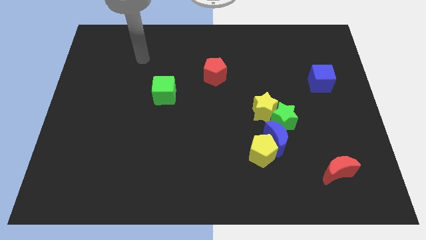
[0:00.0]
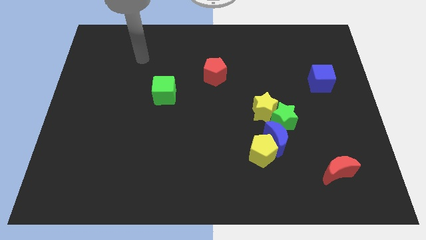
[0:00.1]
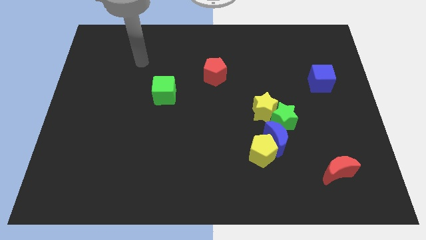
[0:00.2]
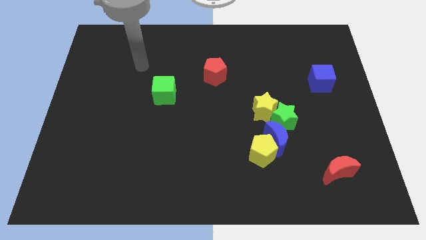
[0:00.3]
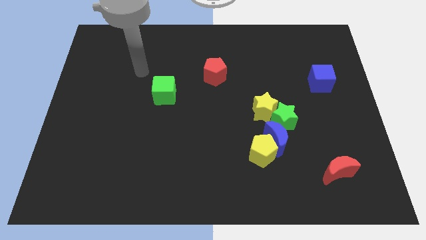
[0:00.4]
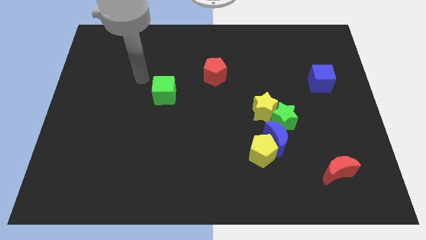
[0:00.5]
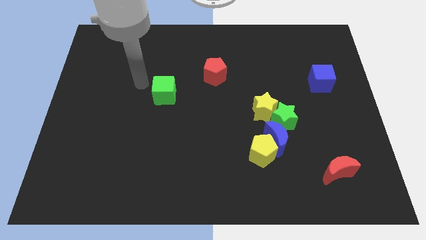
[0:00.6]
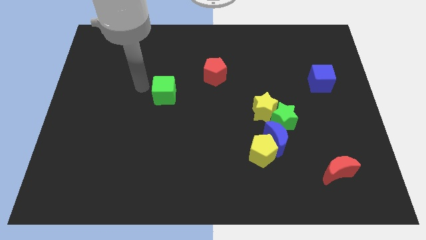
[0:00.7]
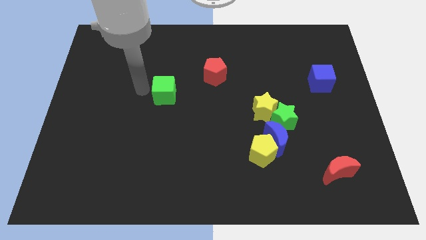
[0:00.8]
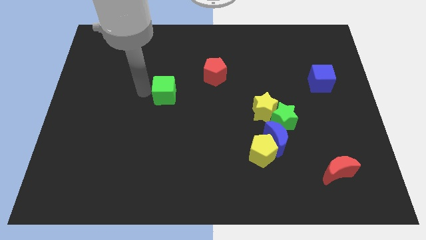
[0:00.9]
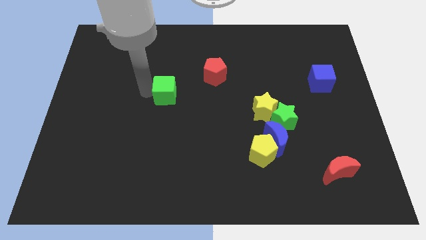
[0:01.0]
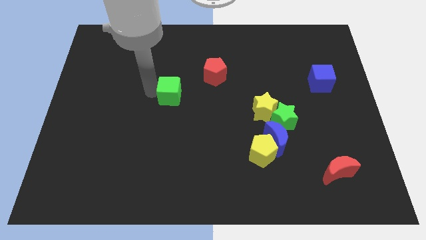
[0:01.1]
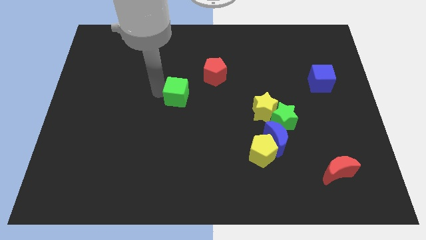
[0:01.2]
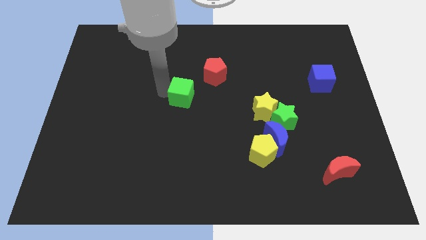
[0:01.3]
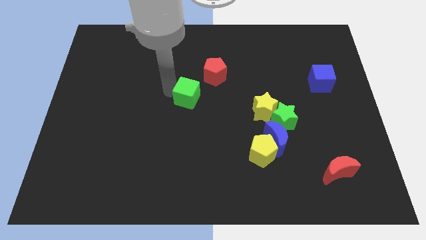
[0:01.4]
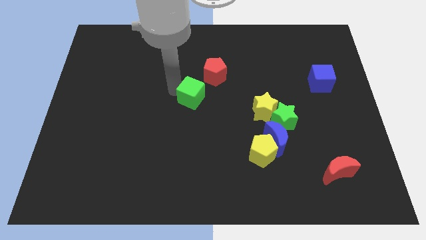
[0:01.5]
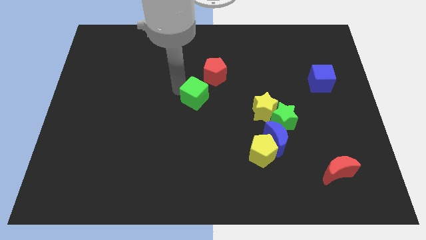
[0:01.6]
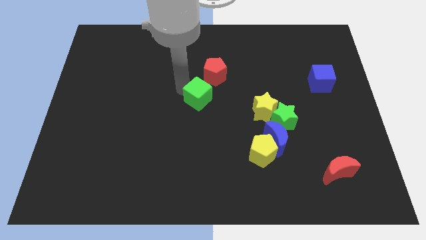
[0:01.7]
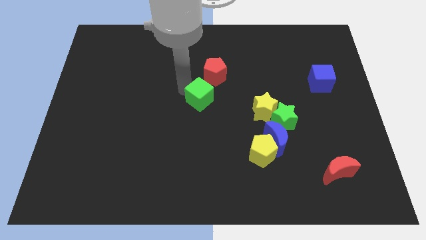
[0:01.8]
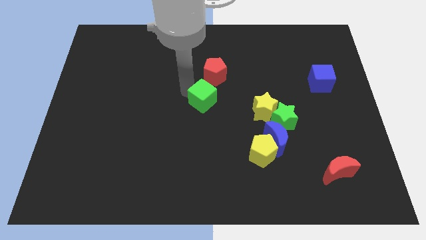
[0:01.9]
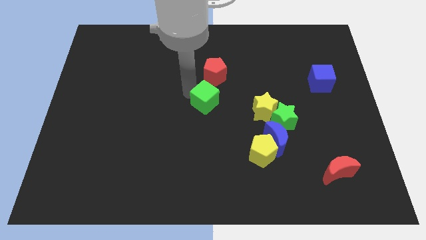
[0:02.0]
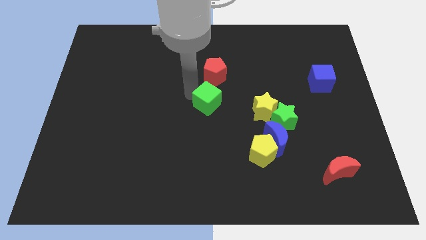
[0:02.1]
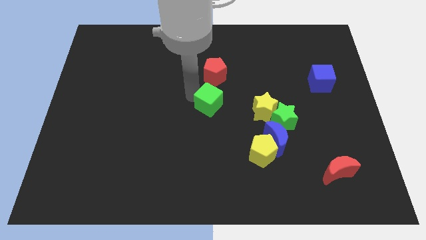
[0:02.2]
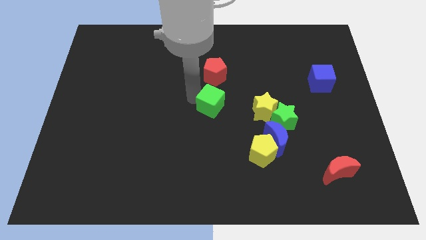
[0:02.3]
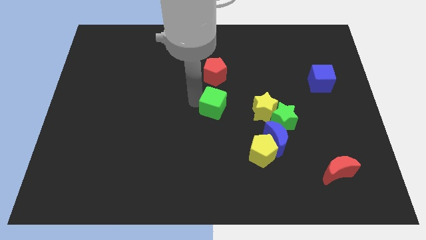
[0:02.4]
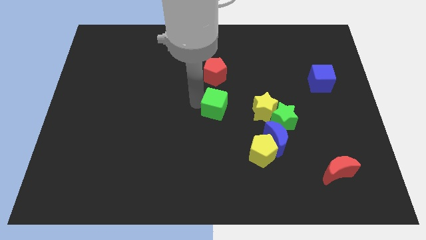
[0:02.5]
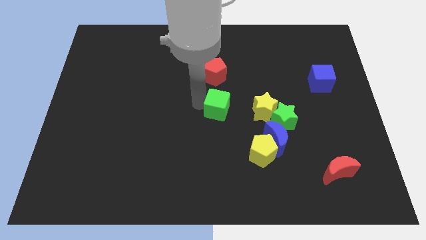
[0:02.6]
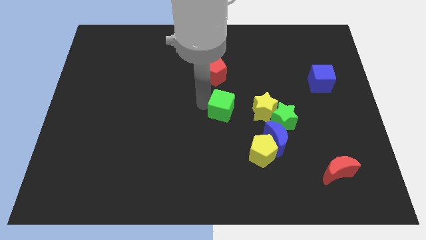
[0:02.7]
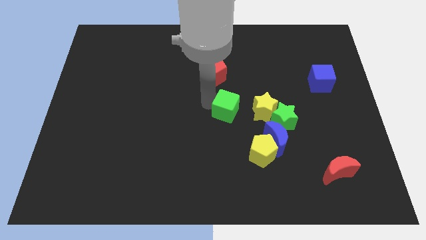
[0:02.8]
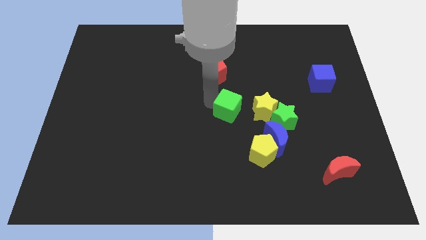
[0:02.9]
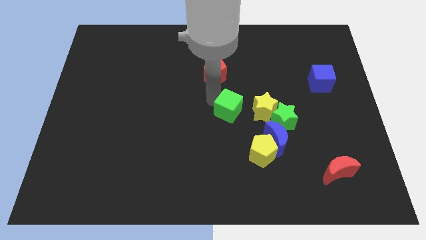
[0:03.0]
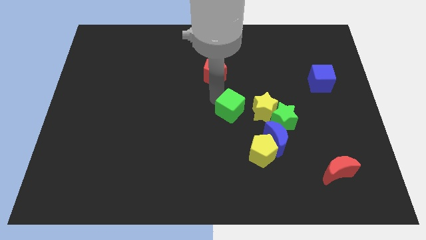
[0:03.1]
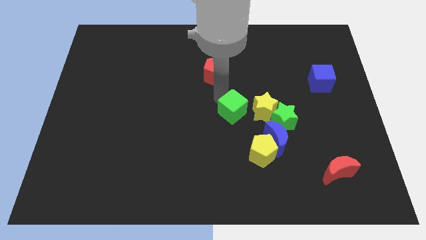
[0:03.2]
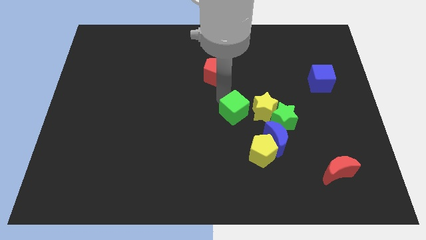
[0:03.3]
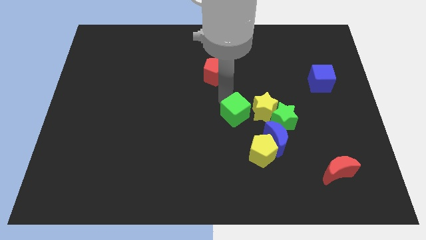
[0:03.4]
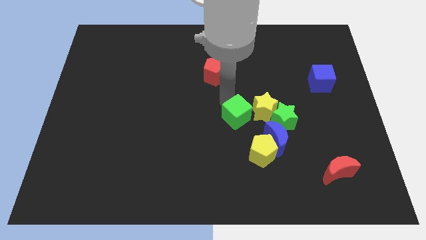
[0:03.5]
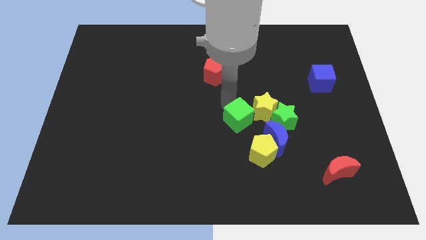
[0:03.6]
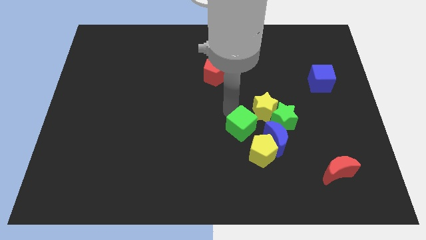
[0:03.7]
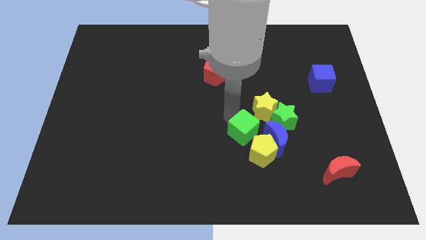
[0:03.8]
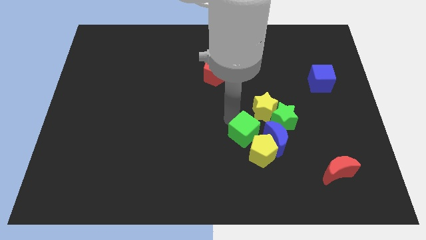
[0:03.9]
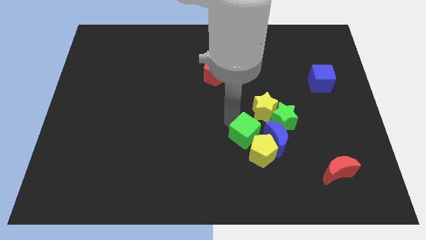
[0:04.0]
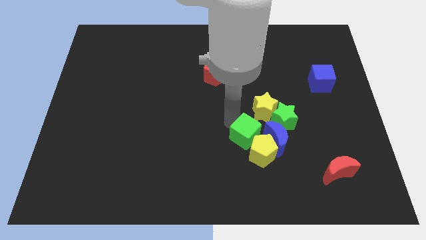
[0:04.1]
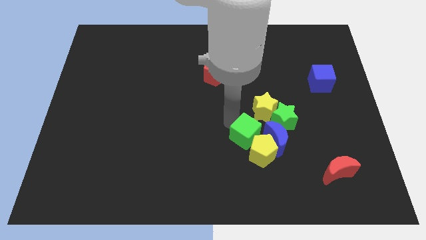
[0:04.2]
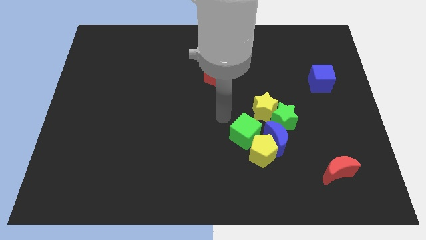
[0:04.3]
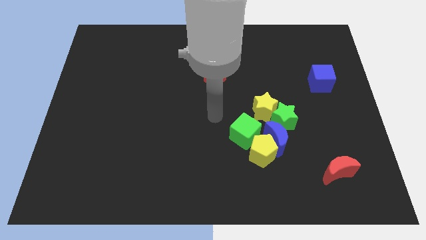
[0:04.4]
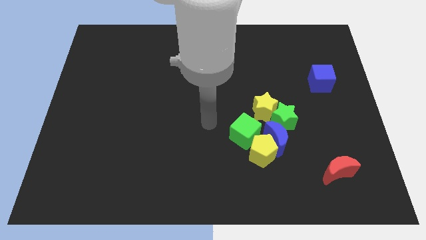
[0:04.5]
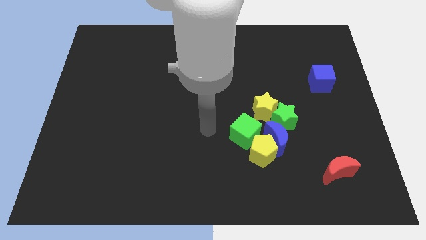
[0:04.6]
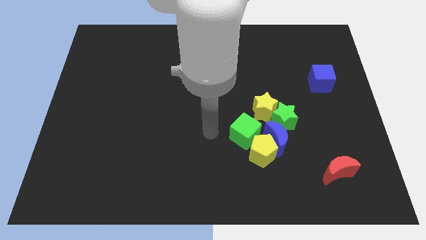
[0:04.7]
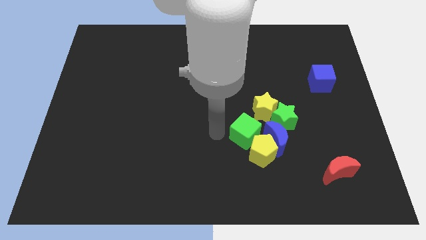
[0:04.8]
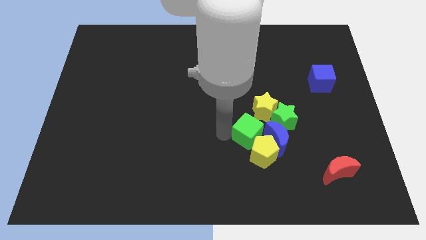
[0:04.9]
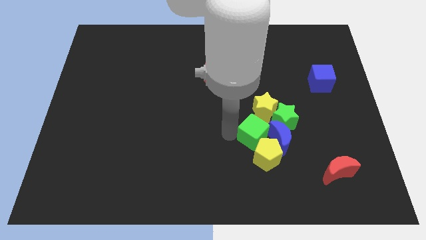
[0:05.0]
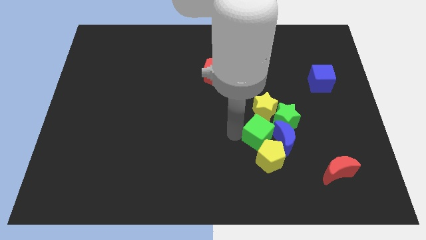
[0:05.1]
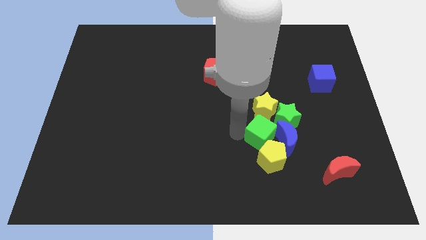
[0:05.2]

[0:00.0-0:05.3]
put the green cube next to the blue moon

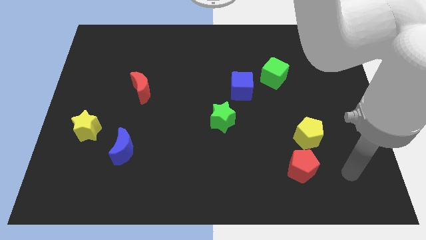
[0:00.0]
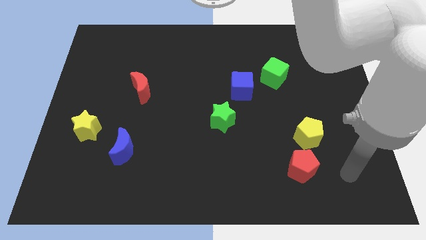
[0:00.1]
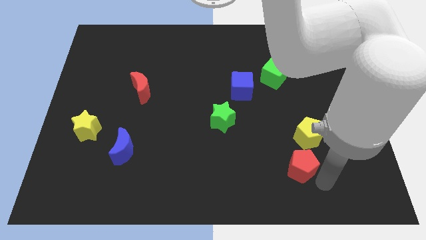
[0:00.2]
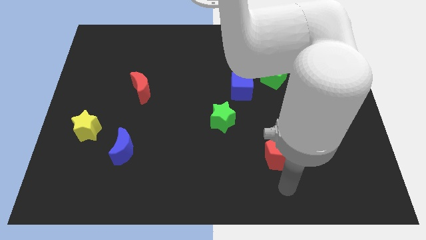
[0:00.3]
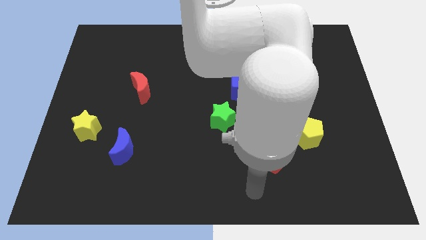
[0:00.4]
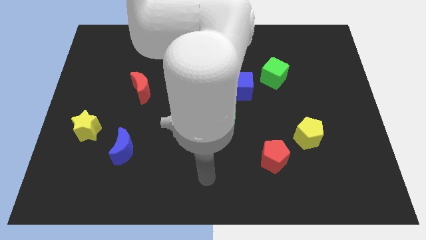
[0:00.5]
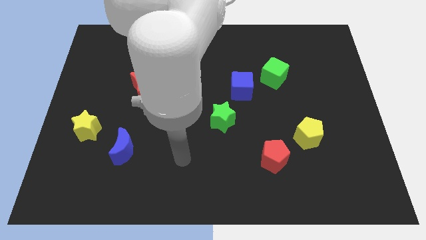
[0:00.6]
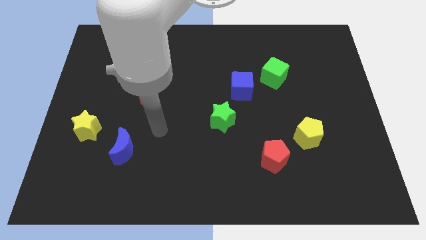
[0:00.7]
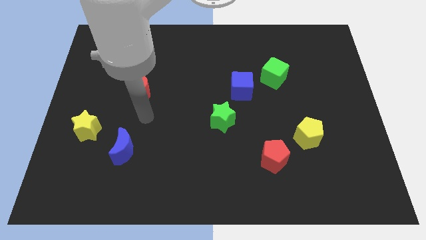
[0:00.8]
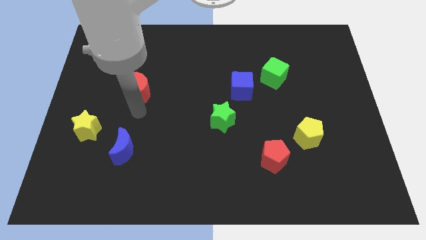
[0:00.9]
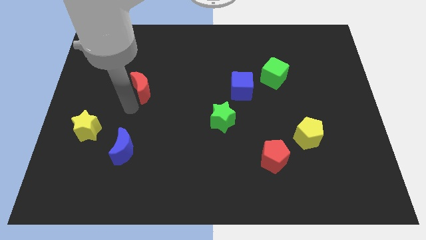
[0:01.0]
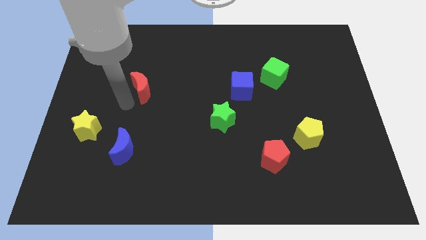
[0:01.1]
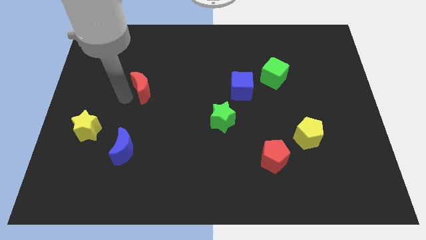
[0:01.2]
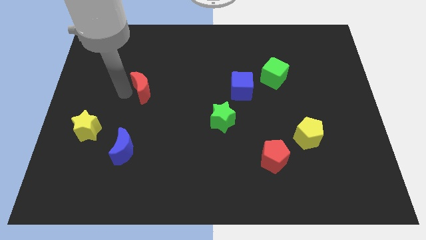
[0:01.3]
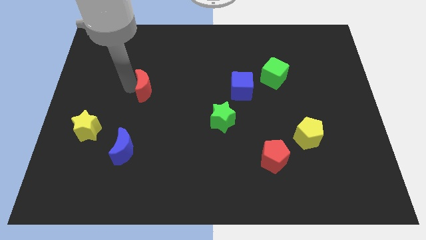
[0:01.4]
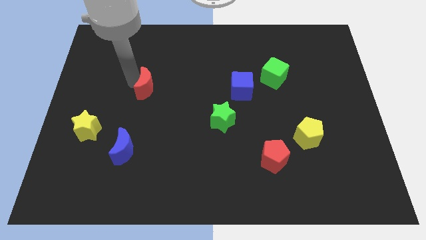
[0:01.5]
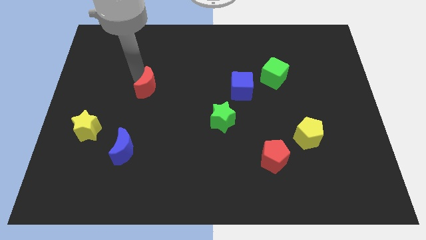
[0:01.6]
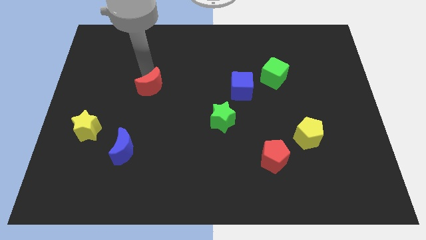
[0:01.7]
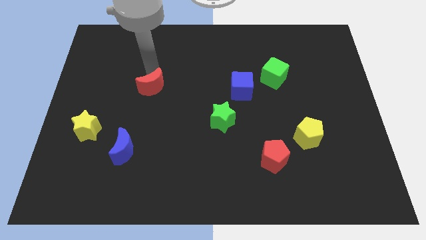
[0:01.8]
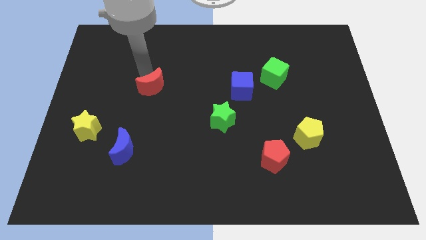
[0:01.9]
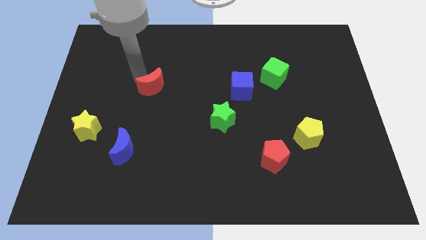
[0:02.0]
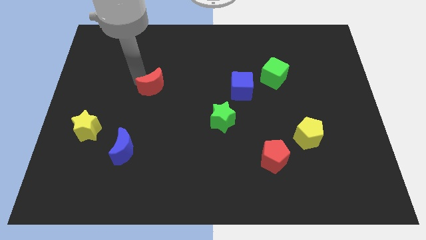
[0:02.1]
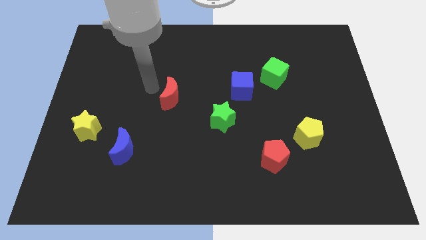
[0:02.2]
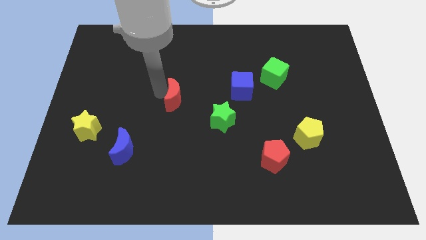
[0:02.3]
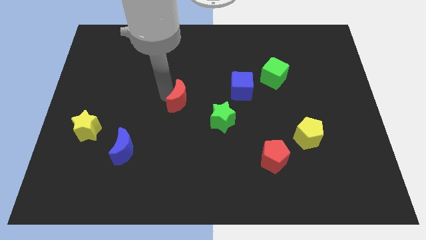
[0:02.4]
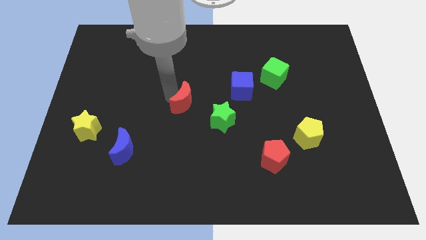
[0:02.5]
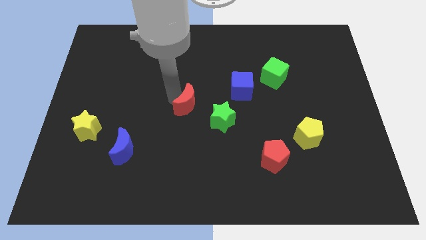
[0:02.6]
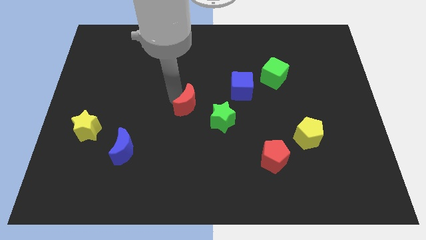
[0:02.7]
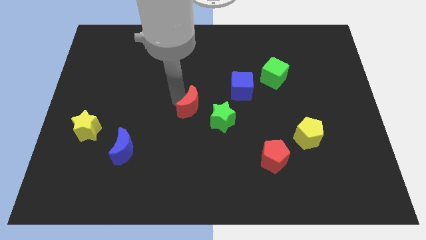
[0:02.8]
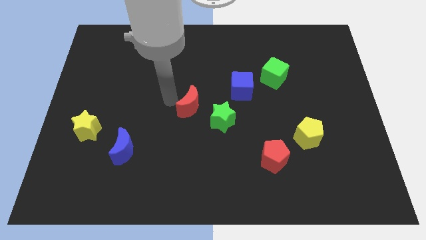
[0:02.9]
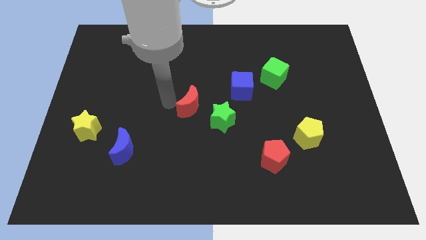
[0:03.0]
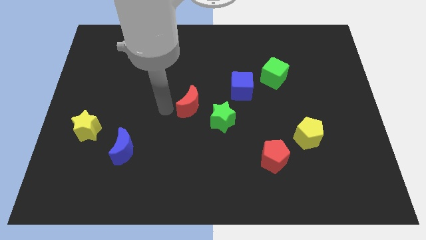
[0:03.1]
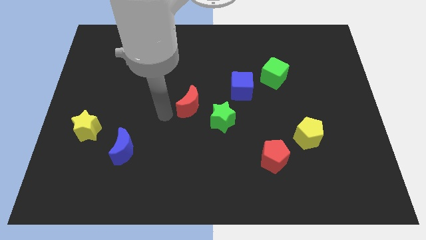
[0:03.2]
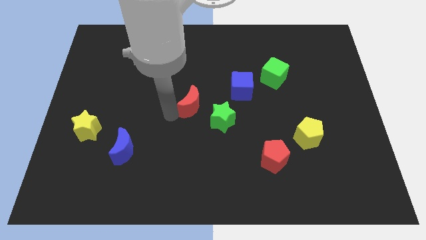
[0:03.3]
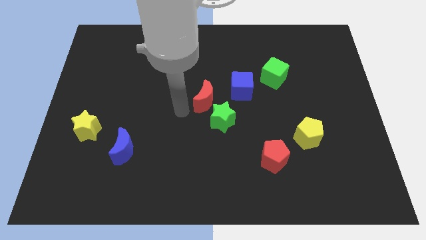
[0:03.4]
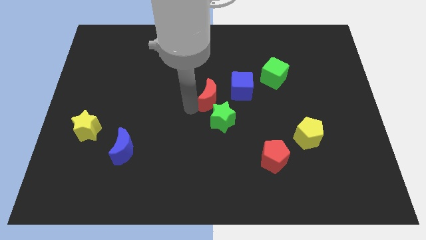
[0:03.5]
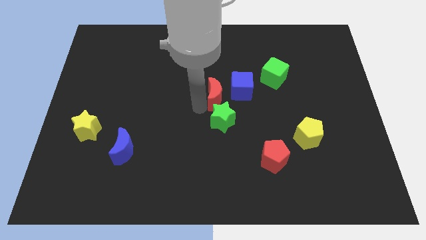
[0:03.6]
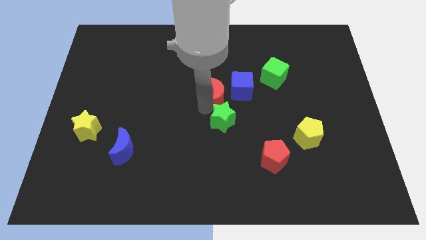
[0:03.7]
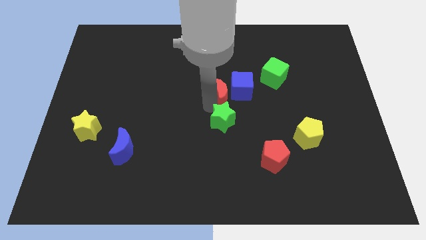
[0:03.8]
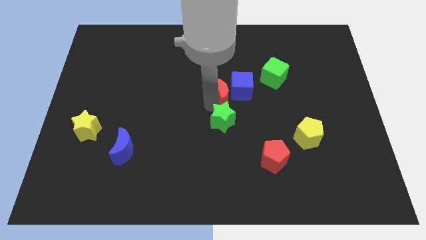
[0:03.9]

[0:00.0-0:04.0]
push the red moon next to the blue cube
